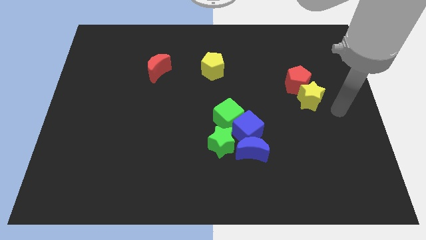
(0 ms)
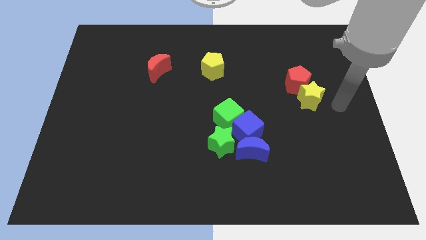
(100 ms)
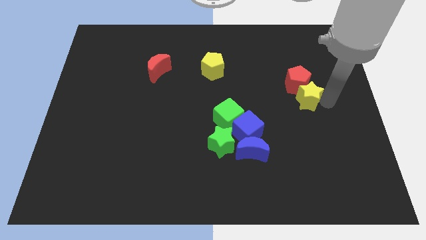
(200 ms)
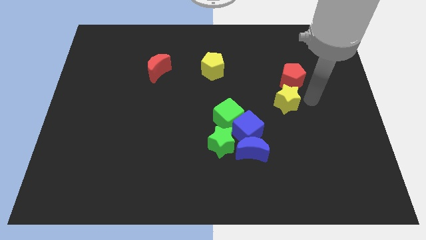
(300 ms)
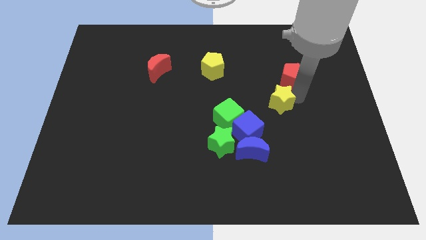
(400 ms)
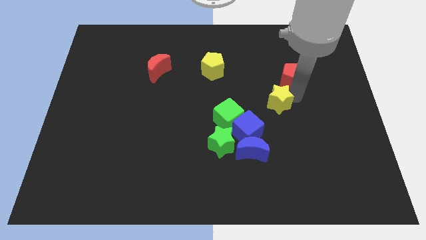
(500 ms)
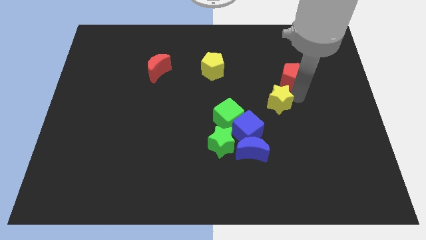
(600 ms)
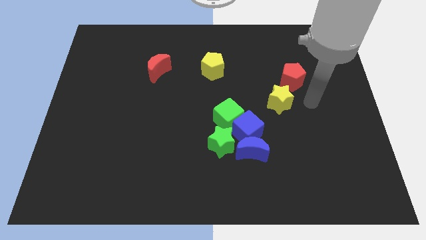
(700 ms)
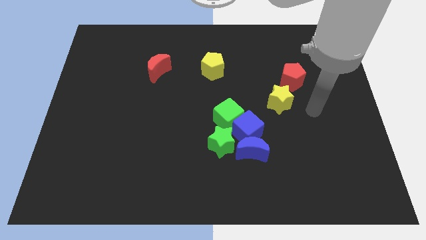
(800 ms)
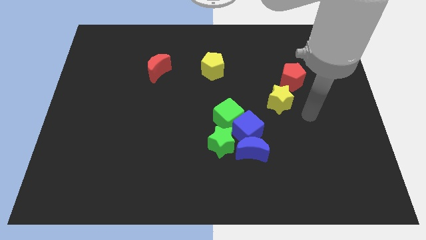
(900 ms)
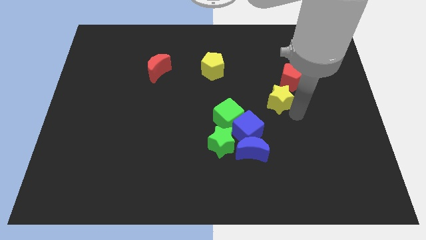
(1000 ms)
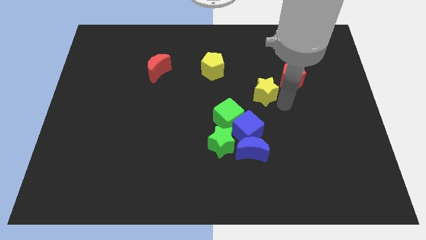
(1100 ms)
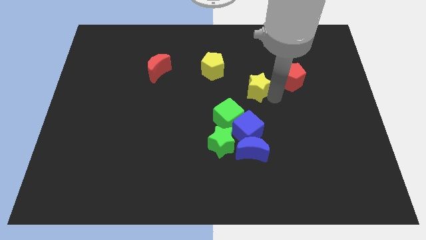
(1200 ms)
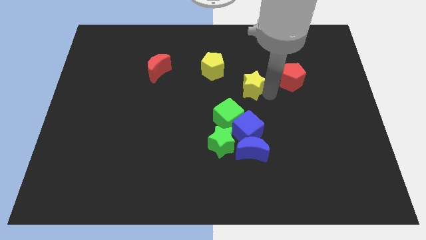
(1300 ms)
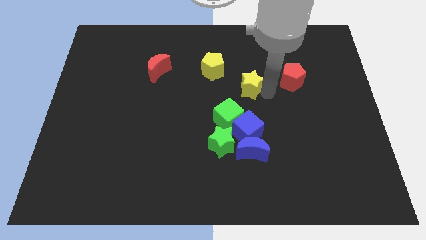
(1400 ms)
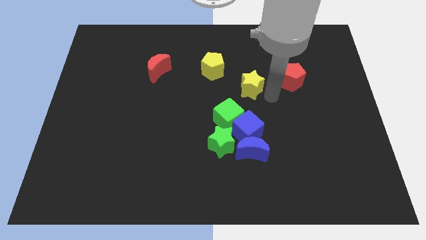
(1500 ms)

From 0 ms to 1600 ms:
push the yellow star to the left of the red pentagon

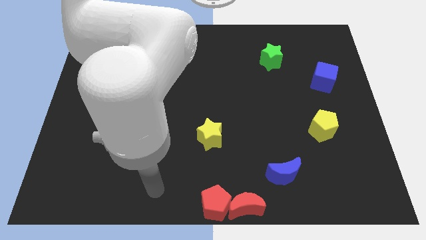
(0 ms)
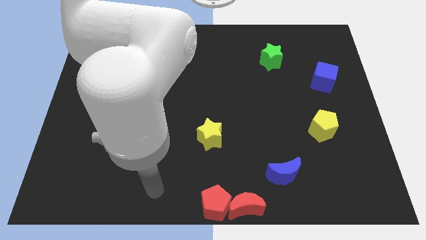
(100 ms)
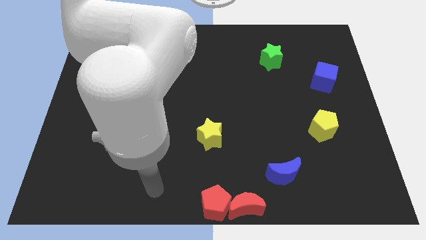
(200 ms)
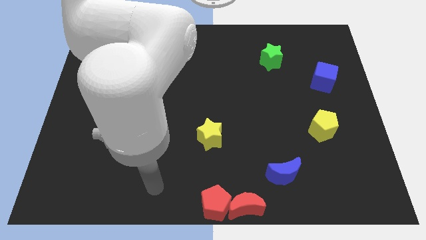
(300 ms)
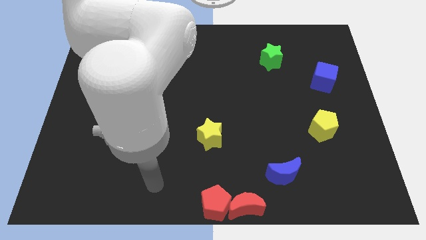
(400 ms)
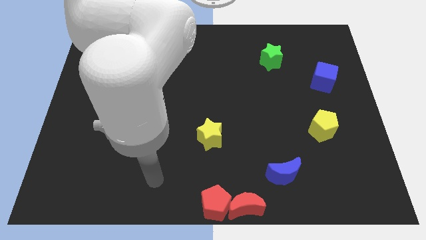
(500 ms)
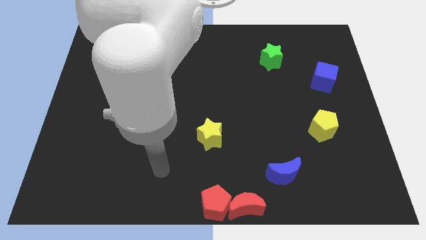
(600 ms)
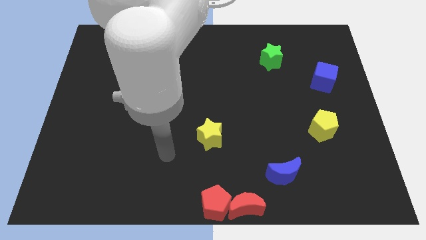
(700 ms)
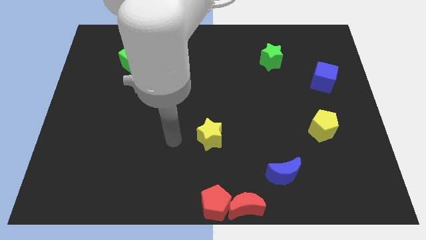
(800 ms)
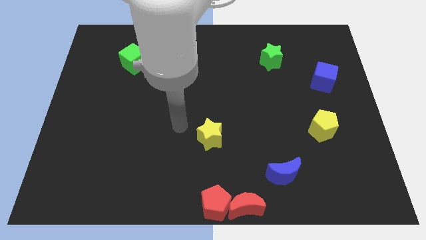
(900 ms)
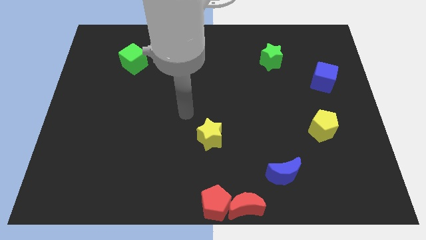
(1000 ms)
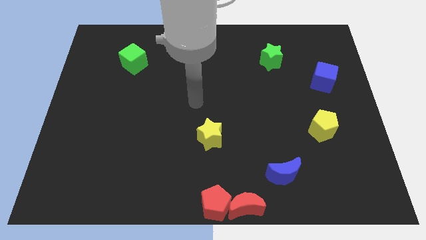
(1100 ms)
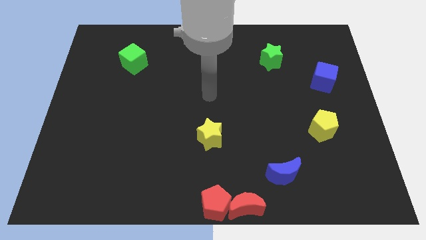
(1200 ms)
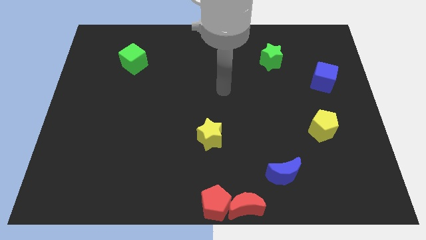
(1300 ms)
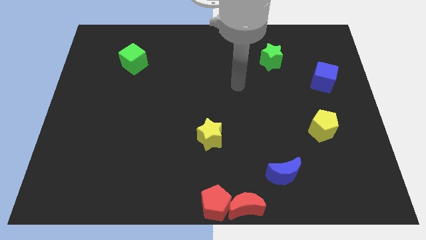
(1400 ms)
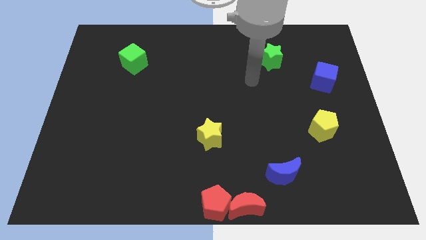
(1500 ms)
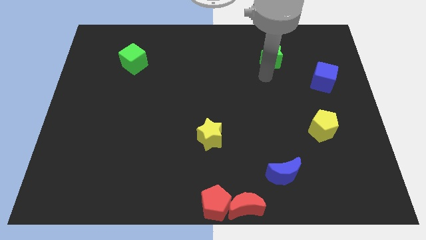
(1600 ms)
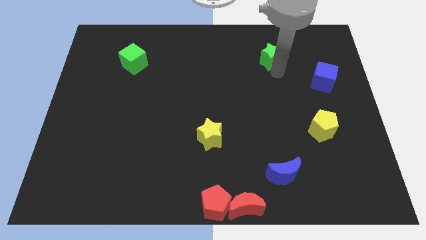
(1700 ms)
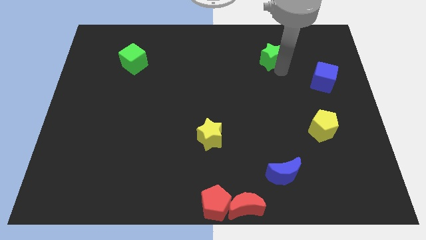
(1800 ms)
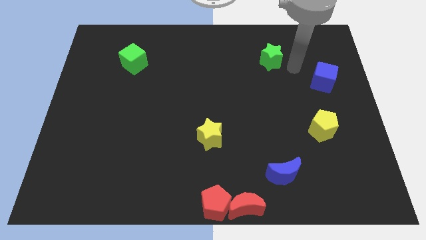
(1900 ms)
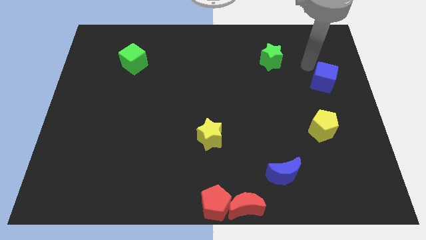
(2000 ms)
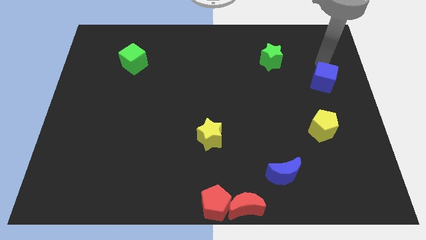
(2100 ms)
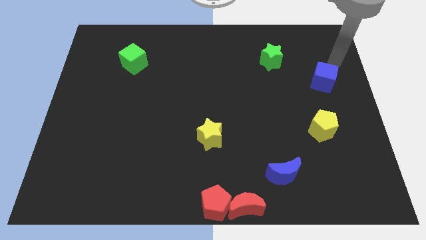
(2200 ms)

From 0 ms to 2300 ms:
point the arm at the top of the blue cube

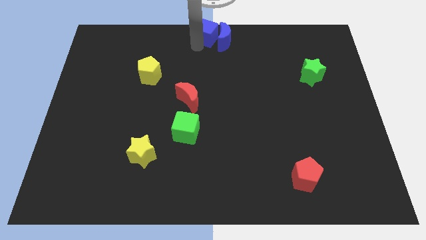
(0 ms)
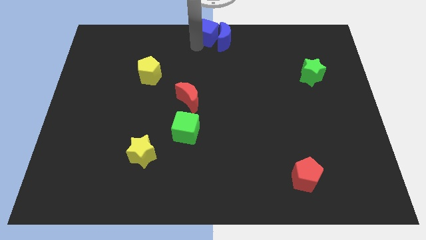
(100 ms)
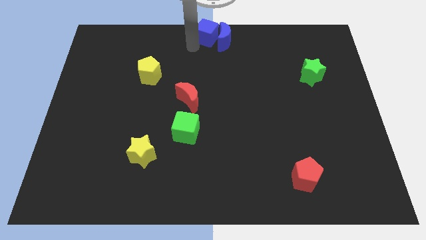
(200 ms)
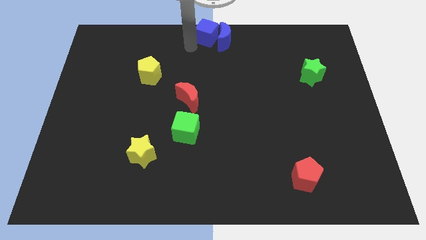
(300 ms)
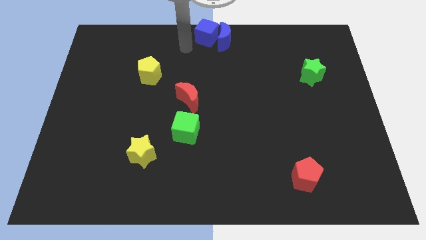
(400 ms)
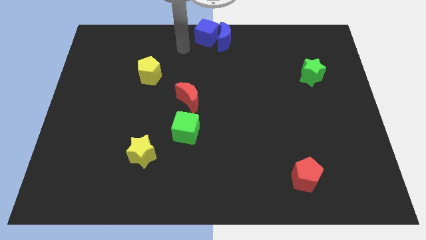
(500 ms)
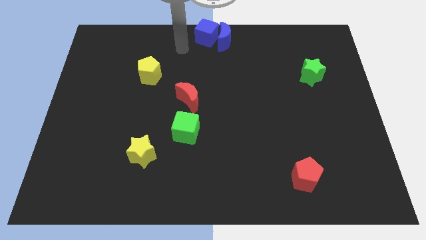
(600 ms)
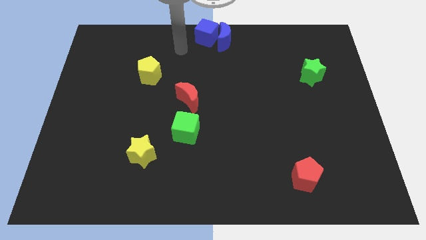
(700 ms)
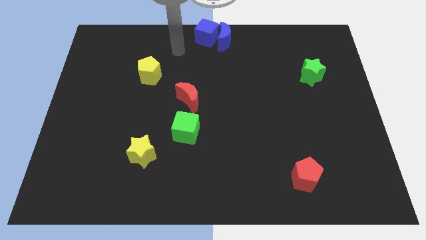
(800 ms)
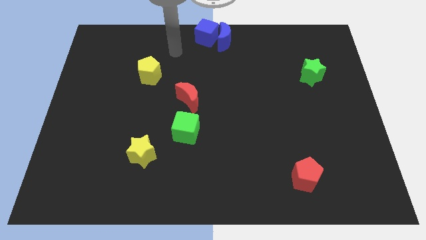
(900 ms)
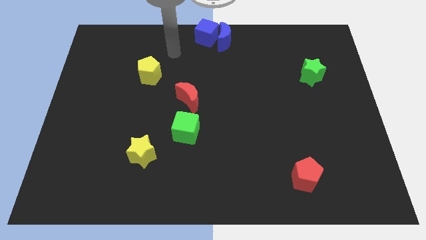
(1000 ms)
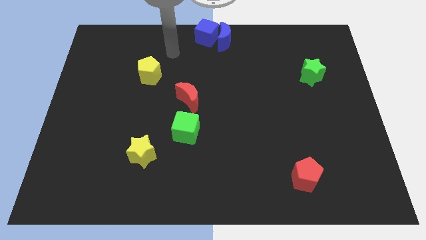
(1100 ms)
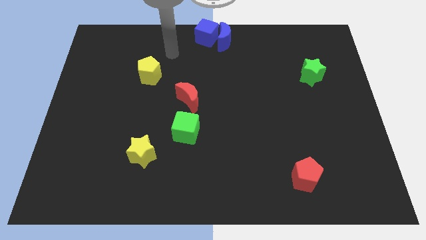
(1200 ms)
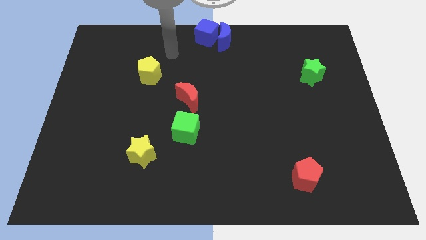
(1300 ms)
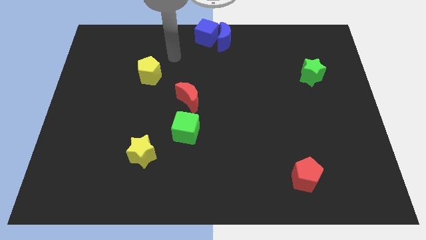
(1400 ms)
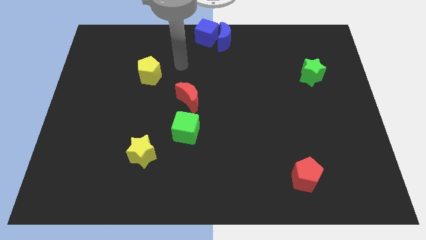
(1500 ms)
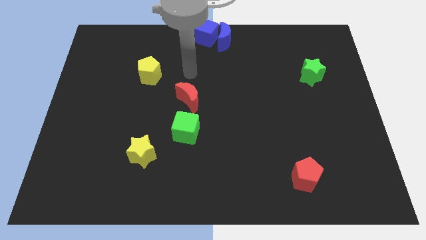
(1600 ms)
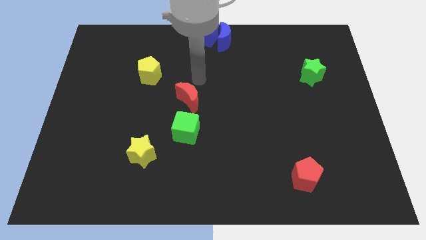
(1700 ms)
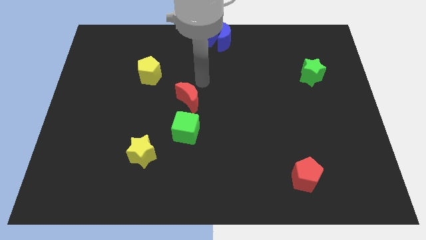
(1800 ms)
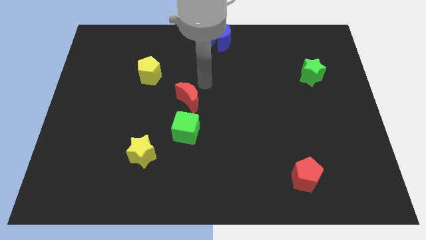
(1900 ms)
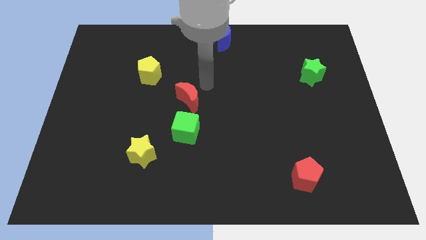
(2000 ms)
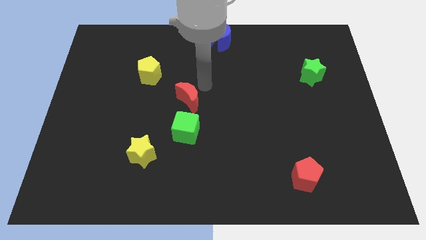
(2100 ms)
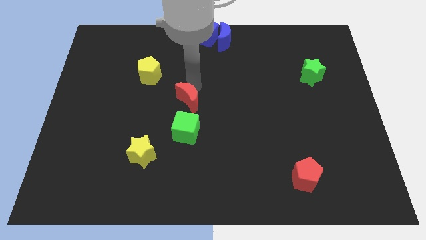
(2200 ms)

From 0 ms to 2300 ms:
move your arm and point on top of red moon

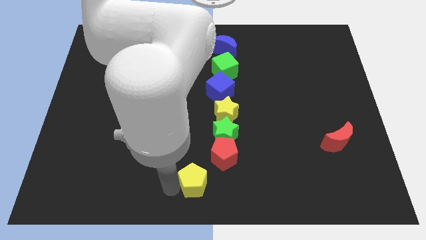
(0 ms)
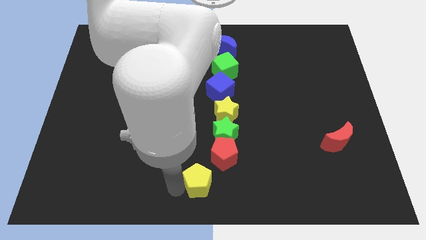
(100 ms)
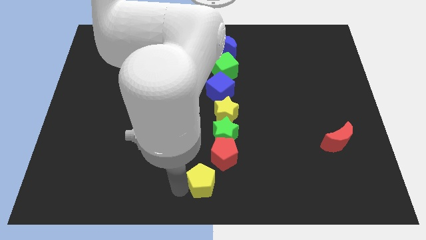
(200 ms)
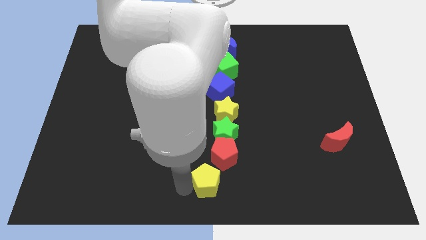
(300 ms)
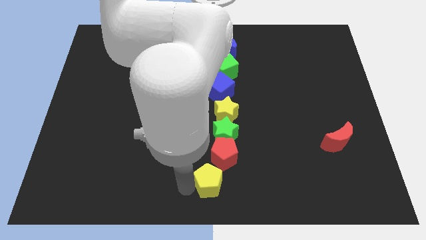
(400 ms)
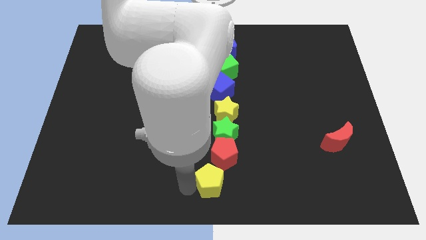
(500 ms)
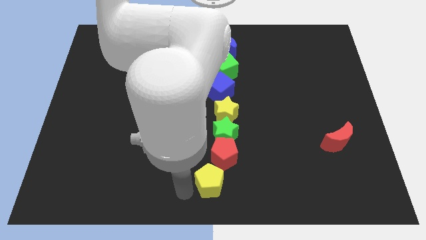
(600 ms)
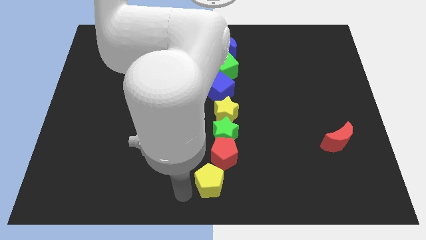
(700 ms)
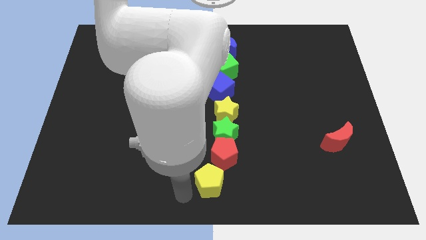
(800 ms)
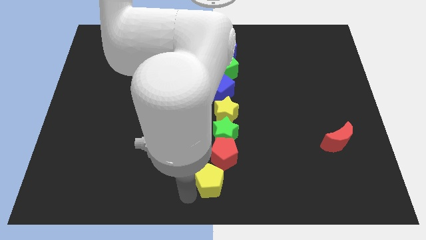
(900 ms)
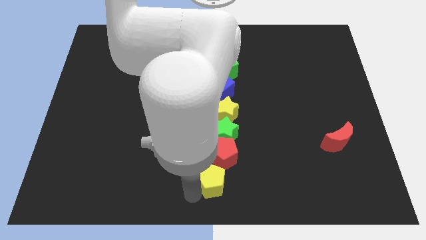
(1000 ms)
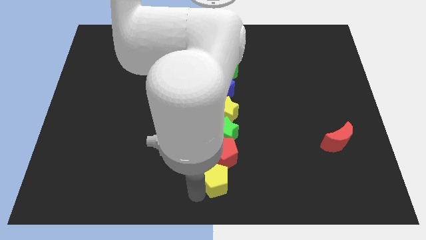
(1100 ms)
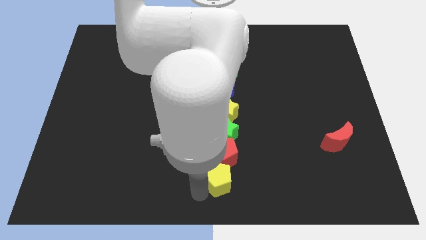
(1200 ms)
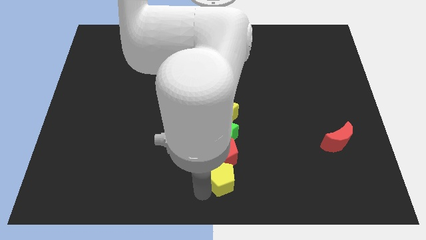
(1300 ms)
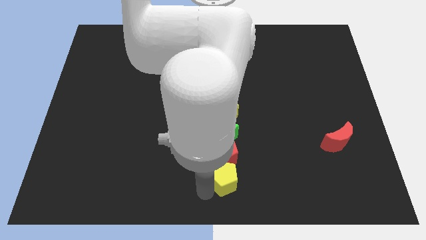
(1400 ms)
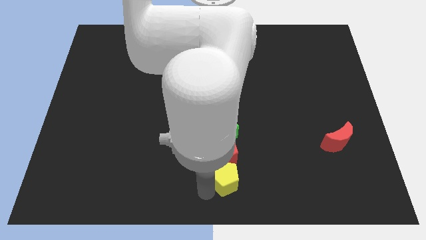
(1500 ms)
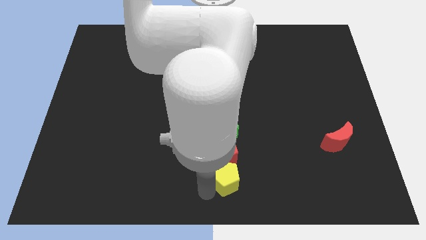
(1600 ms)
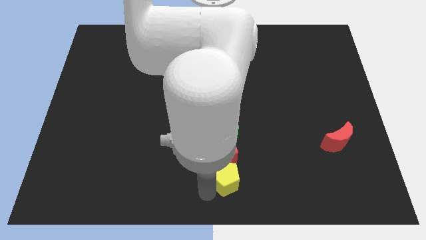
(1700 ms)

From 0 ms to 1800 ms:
slide the yellow pentagon into the bottom side of the red pentagon

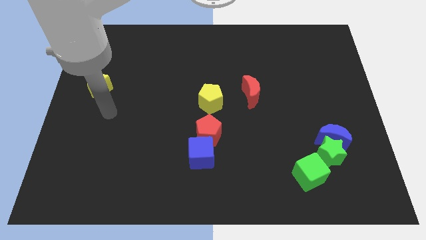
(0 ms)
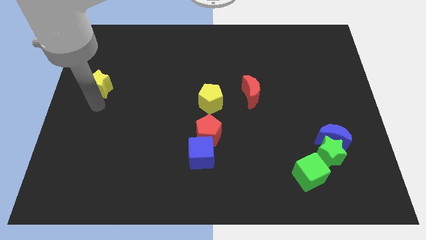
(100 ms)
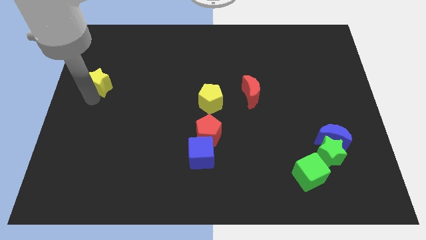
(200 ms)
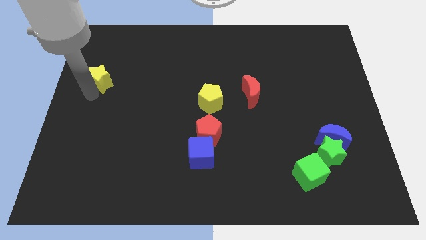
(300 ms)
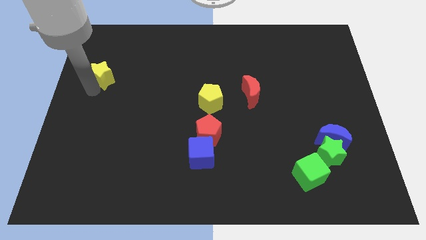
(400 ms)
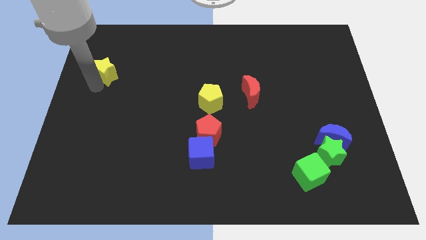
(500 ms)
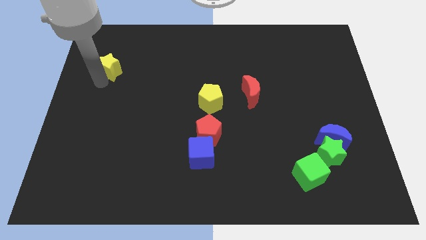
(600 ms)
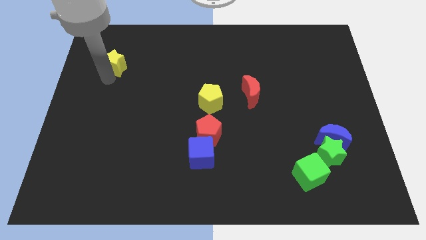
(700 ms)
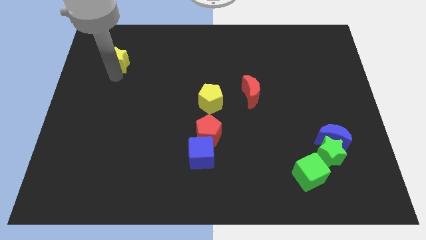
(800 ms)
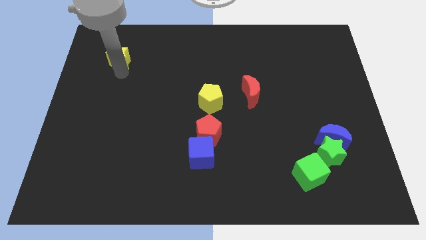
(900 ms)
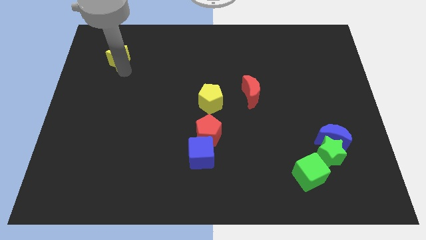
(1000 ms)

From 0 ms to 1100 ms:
move yellow star towards the top of the board

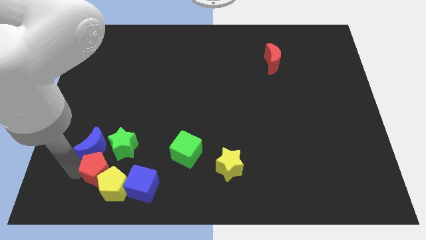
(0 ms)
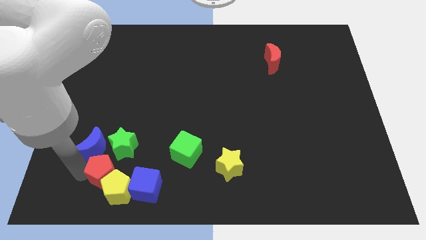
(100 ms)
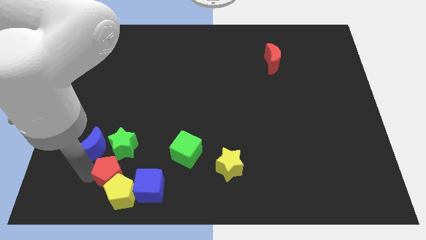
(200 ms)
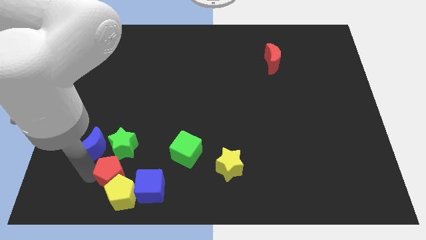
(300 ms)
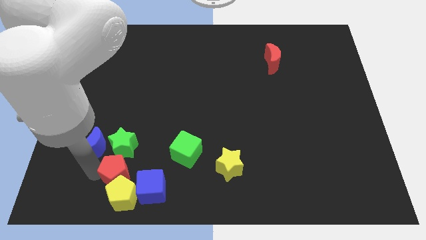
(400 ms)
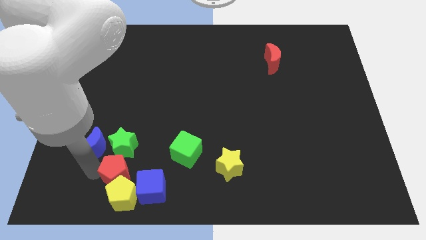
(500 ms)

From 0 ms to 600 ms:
slightly move the red pentagon towards the right
